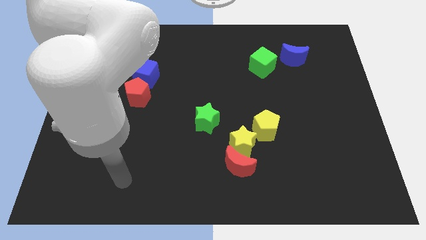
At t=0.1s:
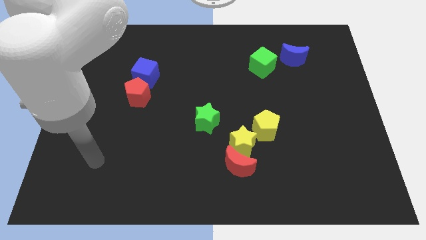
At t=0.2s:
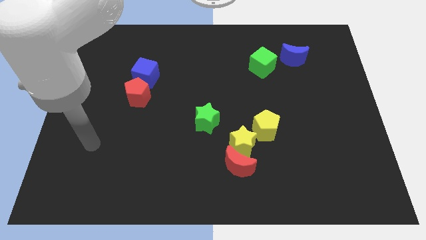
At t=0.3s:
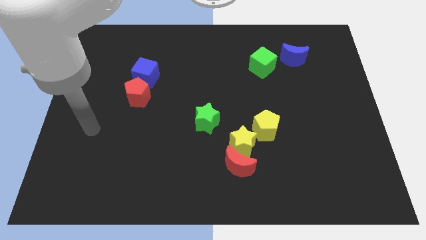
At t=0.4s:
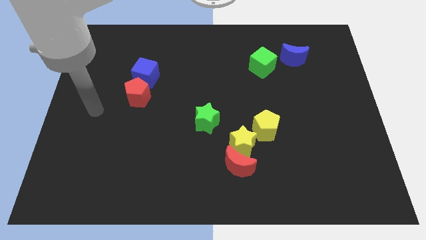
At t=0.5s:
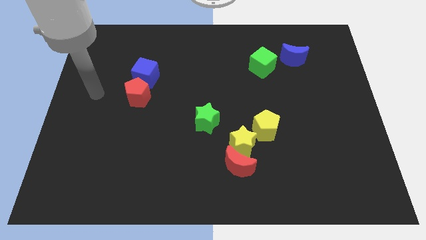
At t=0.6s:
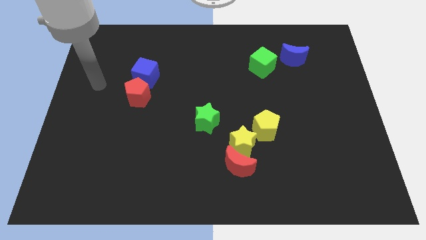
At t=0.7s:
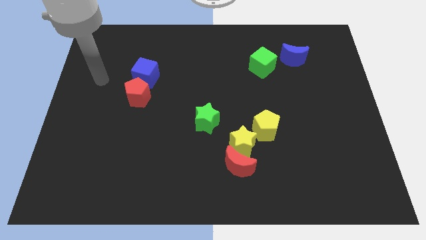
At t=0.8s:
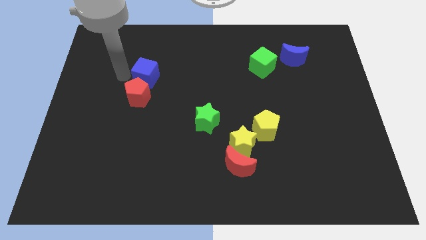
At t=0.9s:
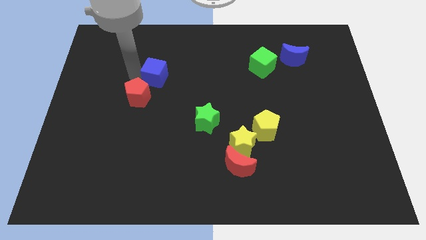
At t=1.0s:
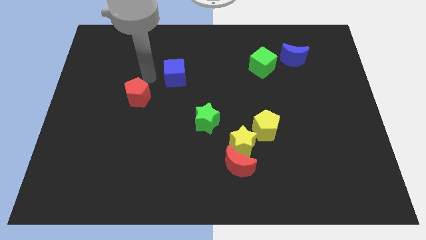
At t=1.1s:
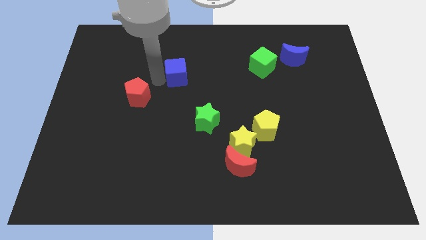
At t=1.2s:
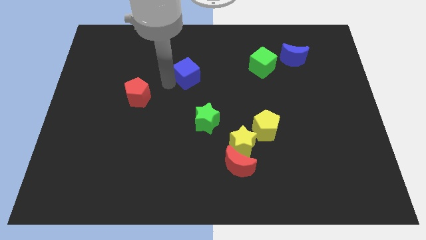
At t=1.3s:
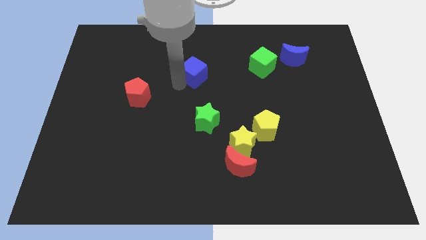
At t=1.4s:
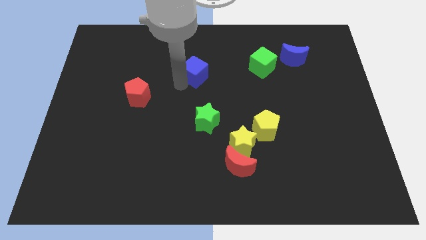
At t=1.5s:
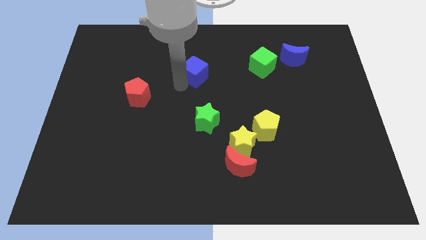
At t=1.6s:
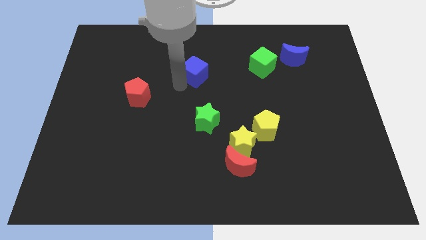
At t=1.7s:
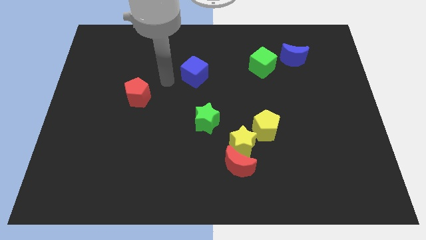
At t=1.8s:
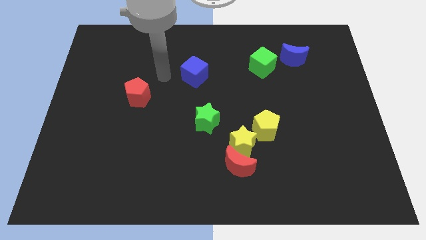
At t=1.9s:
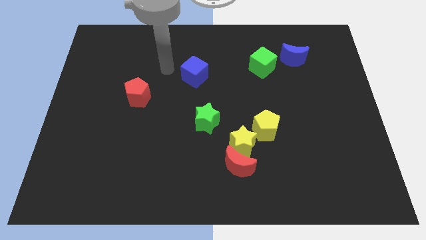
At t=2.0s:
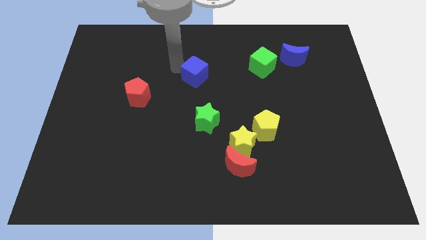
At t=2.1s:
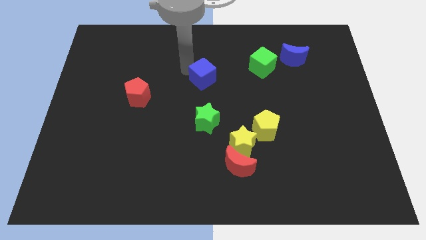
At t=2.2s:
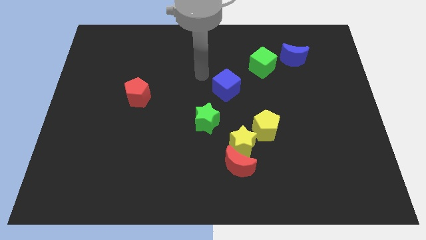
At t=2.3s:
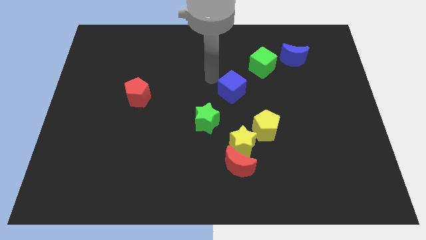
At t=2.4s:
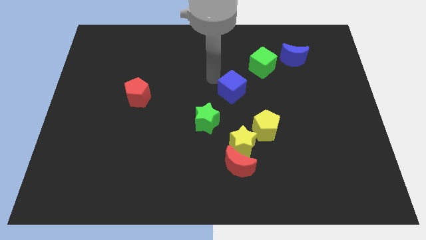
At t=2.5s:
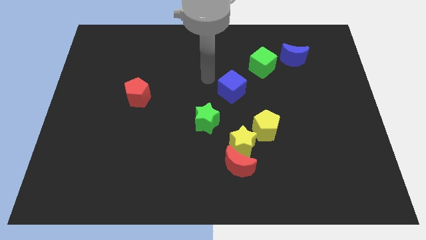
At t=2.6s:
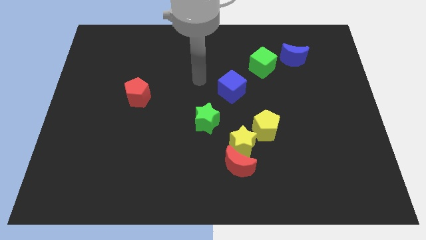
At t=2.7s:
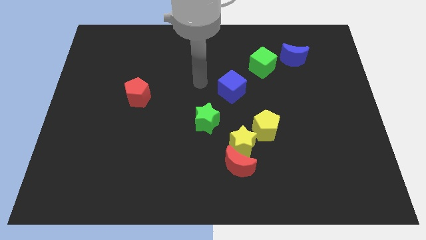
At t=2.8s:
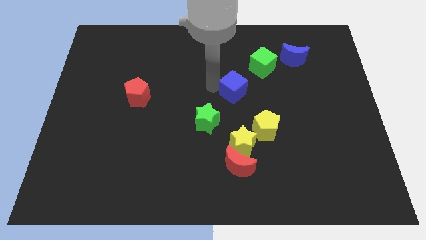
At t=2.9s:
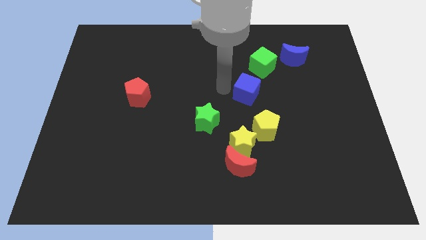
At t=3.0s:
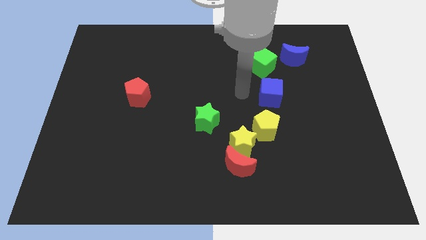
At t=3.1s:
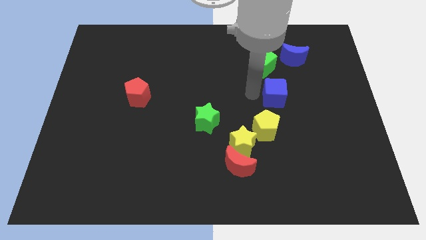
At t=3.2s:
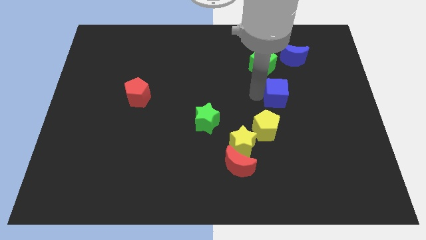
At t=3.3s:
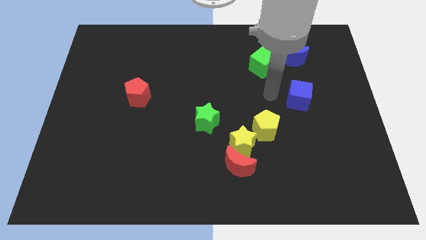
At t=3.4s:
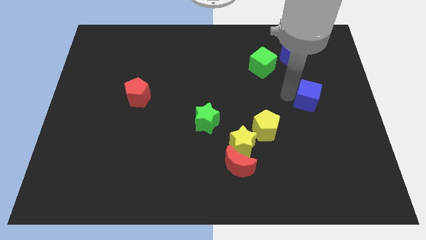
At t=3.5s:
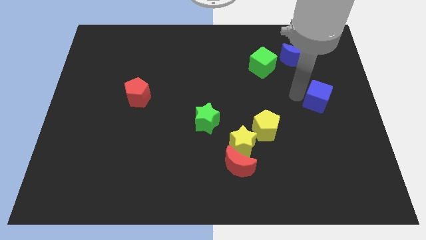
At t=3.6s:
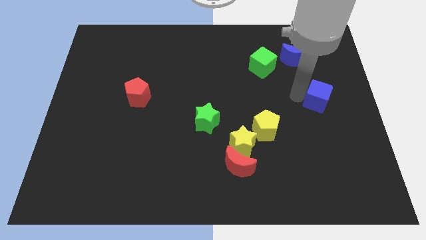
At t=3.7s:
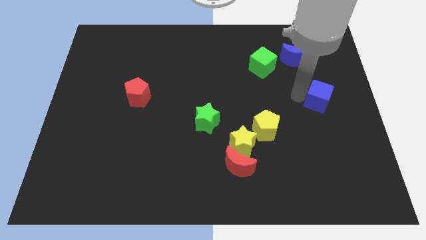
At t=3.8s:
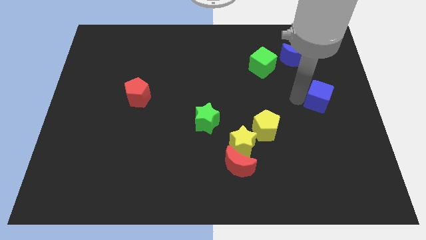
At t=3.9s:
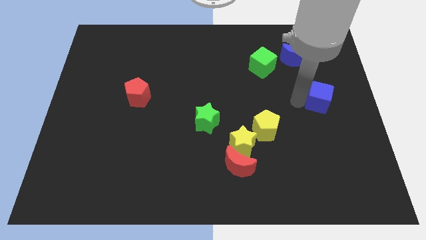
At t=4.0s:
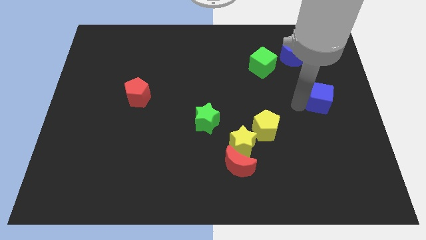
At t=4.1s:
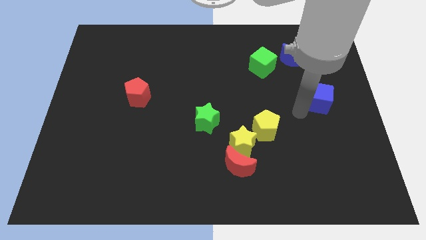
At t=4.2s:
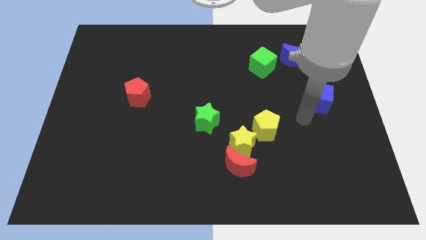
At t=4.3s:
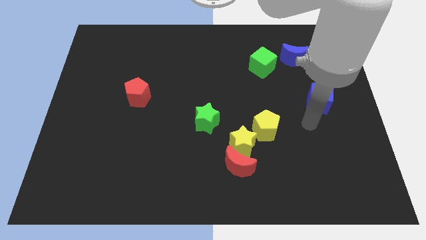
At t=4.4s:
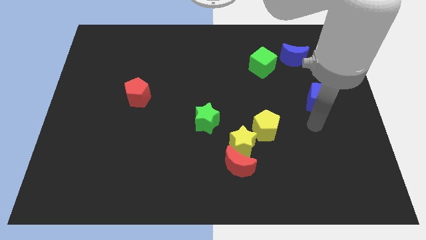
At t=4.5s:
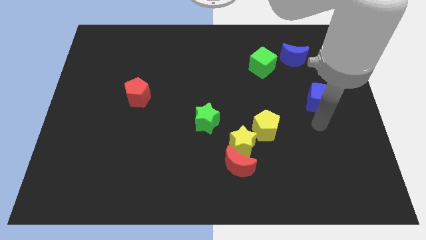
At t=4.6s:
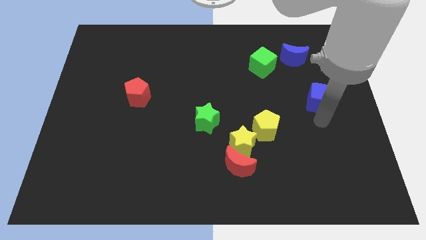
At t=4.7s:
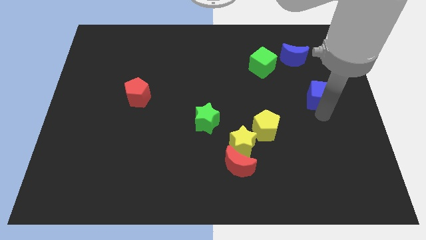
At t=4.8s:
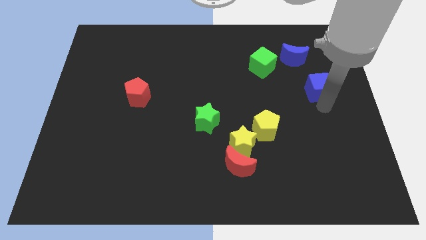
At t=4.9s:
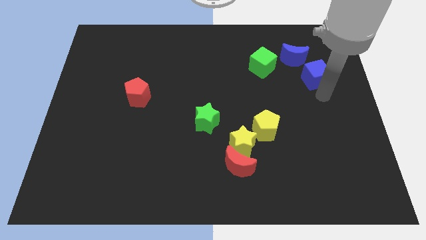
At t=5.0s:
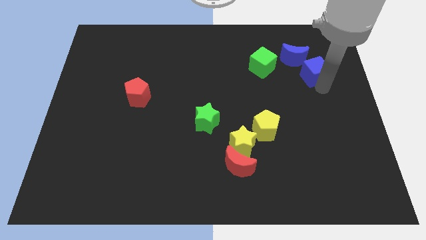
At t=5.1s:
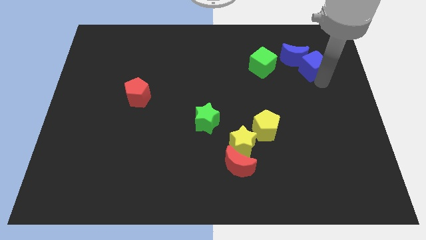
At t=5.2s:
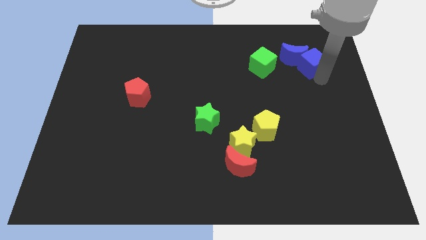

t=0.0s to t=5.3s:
move the blue cube towards the blue moon

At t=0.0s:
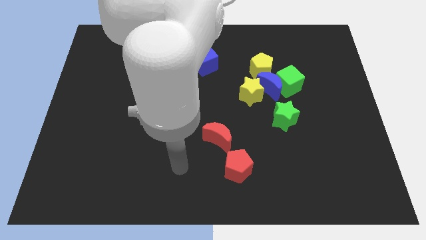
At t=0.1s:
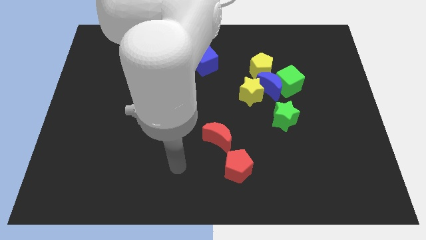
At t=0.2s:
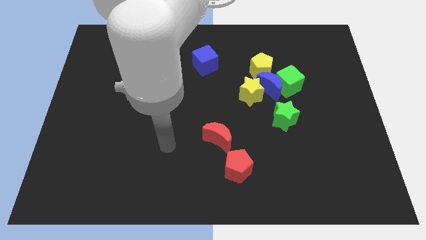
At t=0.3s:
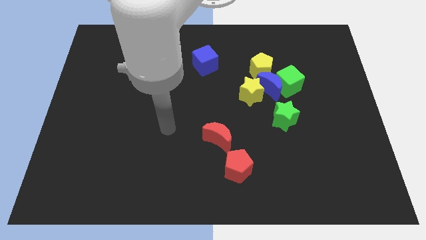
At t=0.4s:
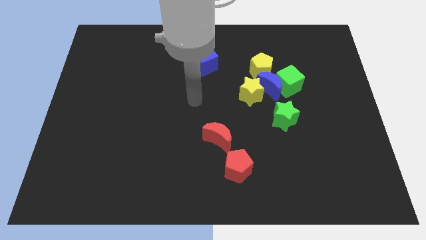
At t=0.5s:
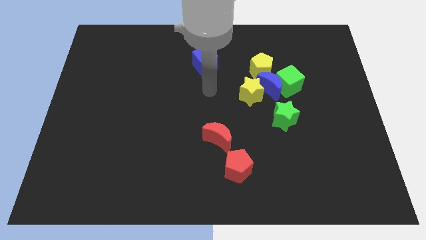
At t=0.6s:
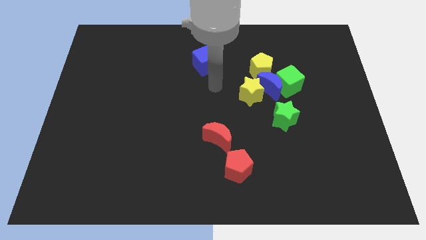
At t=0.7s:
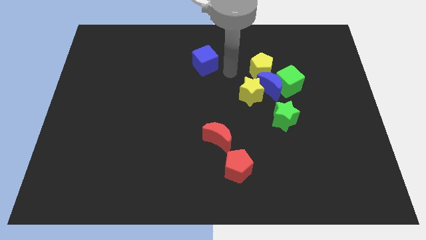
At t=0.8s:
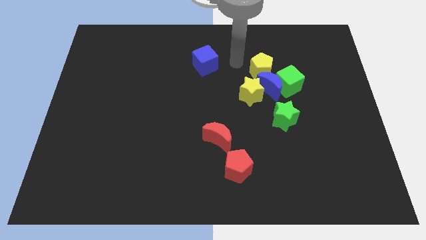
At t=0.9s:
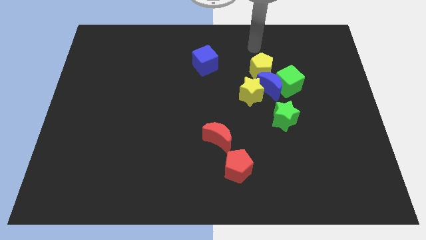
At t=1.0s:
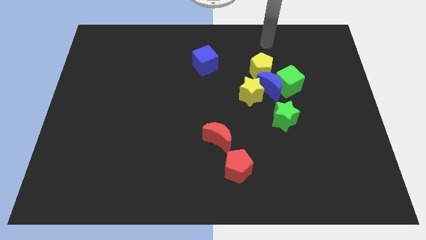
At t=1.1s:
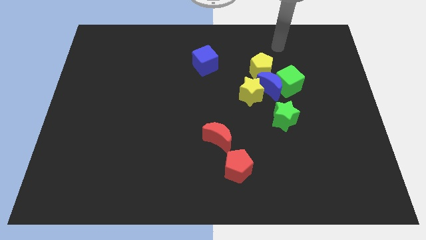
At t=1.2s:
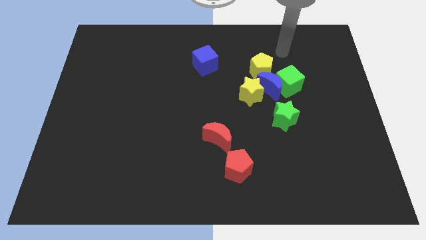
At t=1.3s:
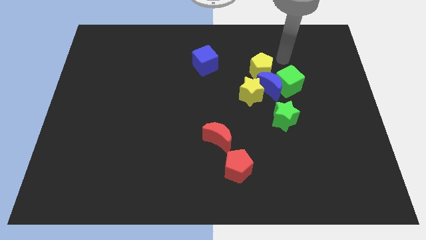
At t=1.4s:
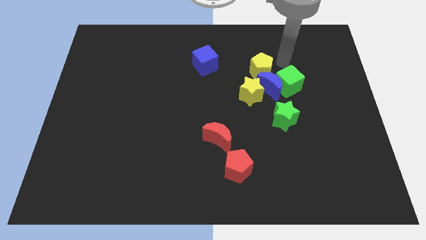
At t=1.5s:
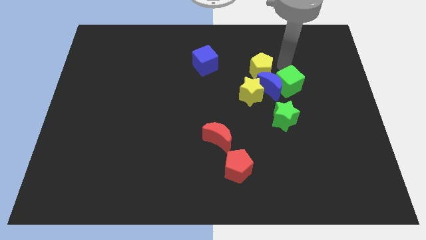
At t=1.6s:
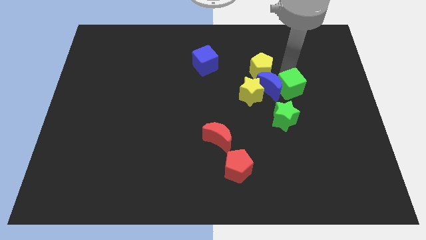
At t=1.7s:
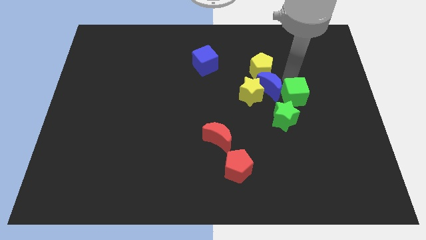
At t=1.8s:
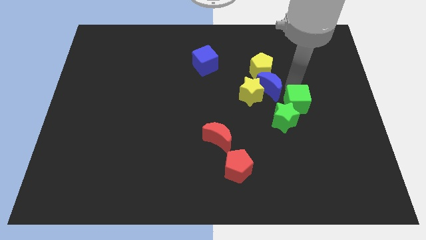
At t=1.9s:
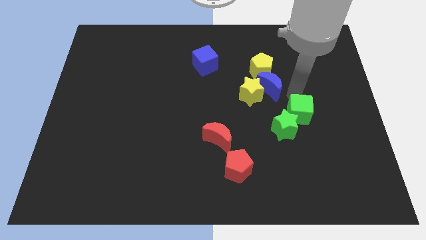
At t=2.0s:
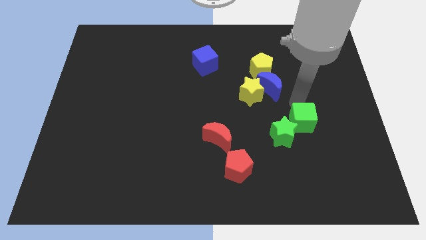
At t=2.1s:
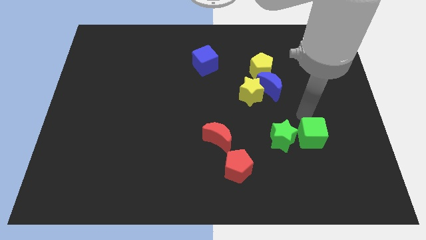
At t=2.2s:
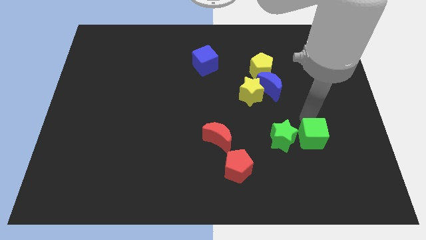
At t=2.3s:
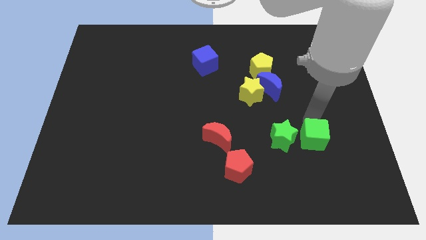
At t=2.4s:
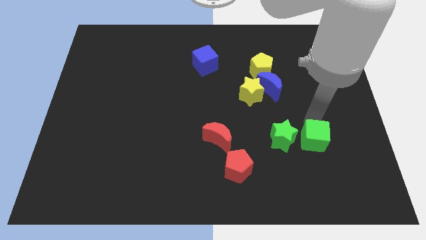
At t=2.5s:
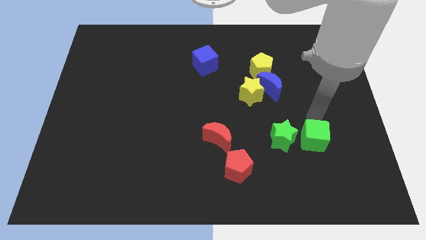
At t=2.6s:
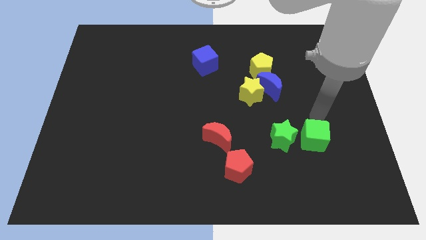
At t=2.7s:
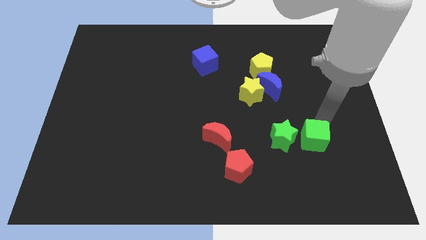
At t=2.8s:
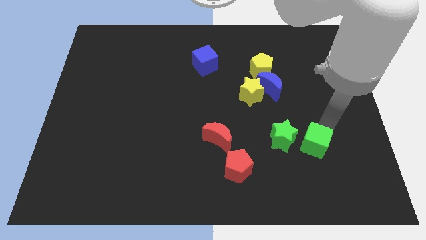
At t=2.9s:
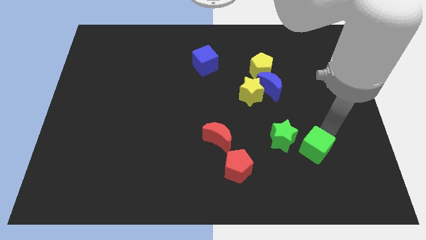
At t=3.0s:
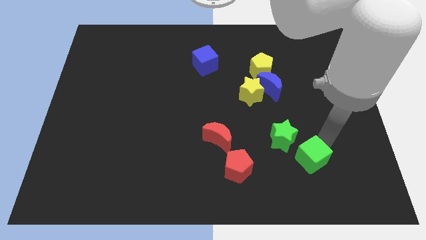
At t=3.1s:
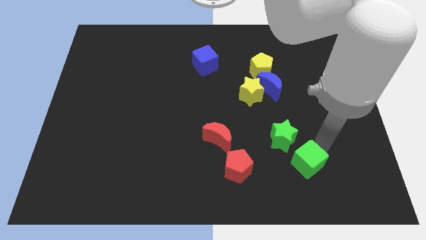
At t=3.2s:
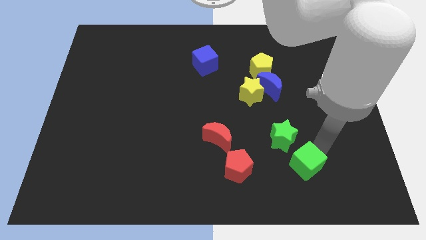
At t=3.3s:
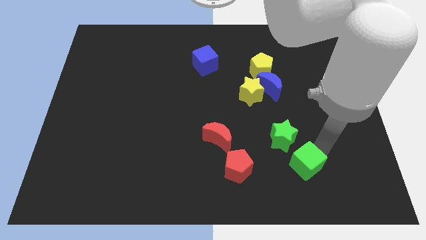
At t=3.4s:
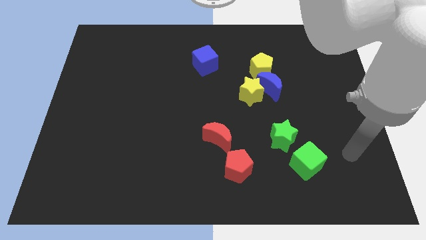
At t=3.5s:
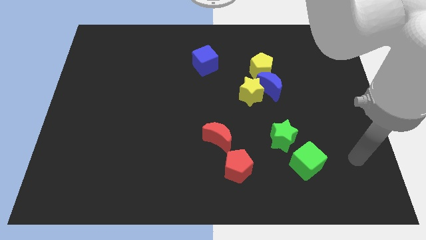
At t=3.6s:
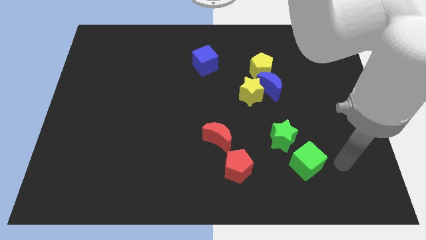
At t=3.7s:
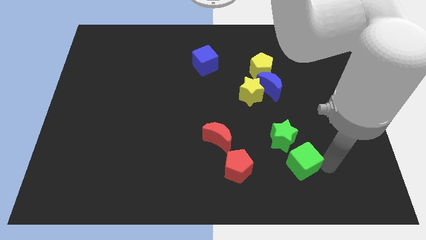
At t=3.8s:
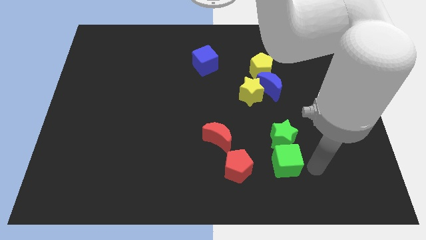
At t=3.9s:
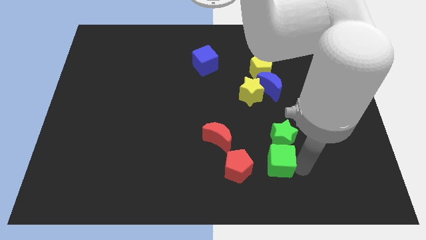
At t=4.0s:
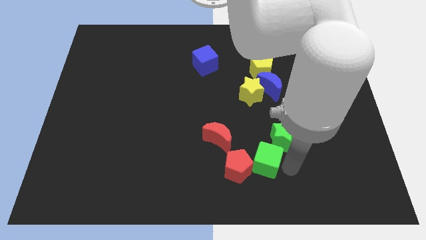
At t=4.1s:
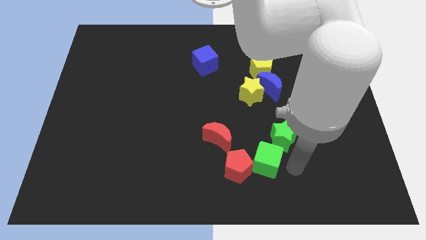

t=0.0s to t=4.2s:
slide the green cube close to the red pentagon
